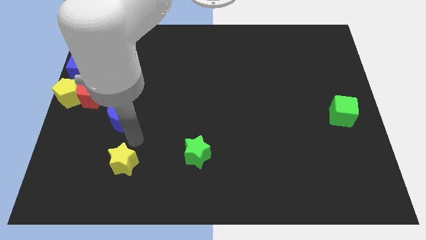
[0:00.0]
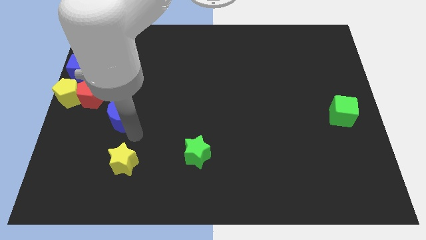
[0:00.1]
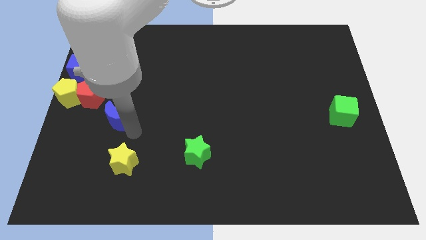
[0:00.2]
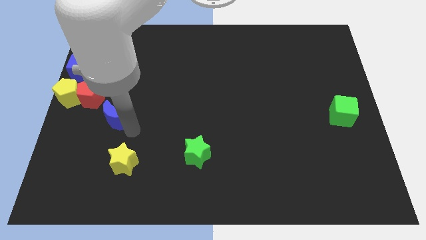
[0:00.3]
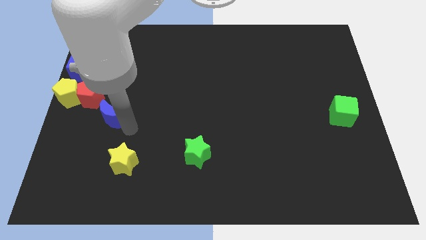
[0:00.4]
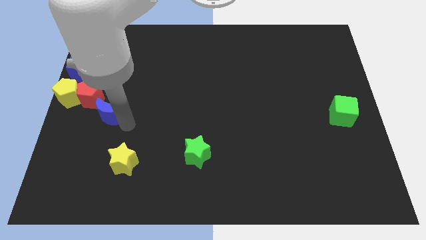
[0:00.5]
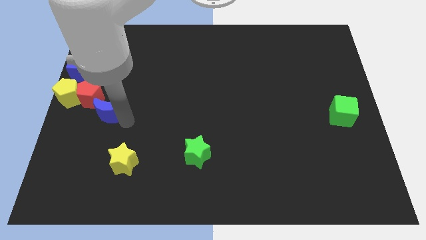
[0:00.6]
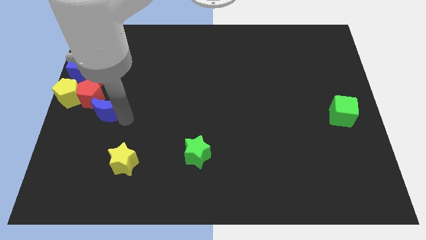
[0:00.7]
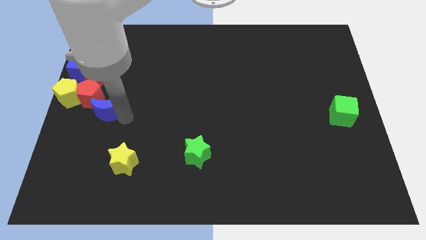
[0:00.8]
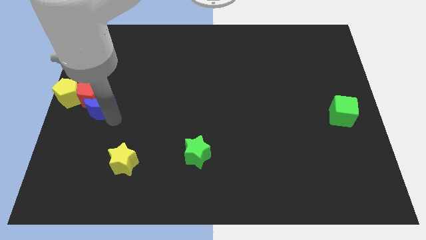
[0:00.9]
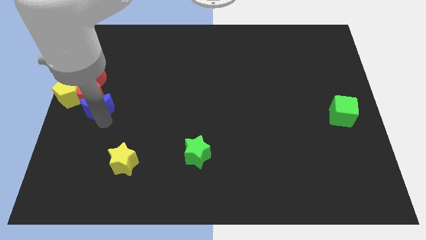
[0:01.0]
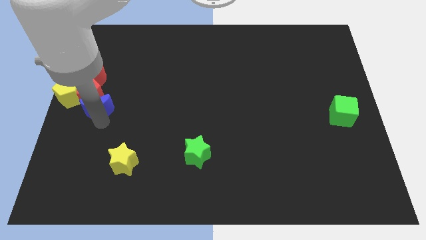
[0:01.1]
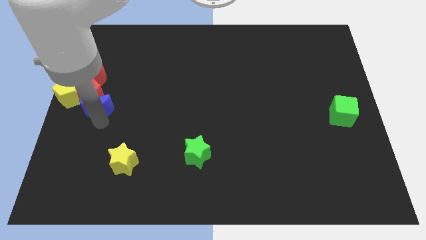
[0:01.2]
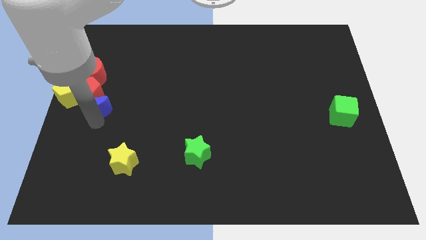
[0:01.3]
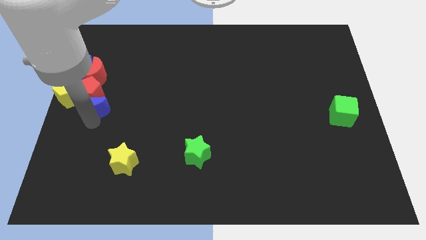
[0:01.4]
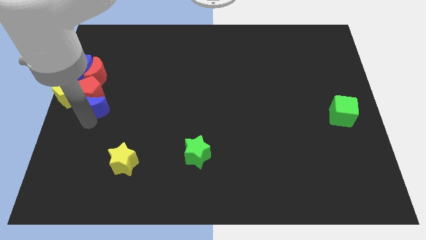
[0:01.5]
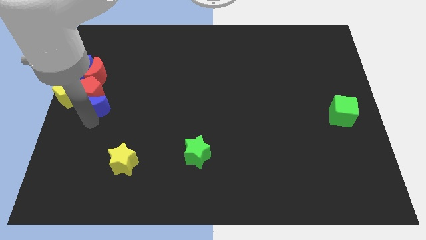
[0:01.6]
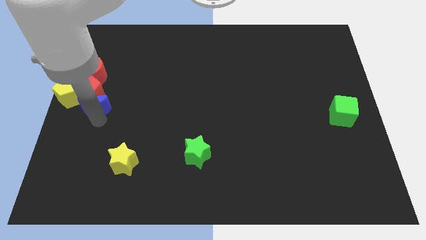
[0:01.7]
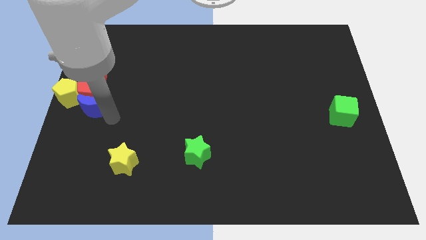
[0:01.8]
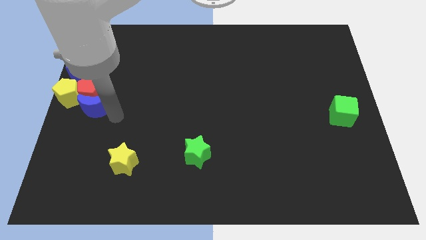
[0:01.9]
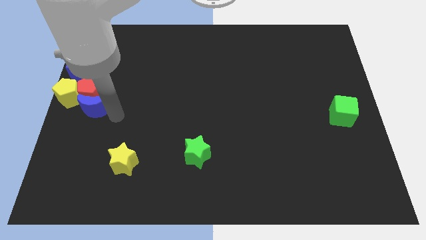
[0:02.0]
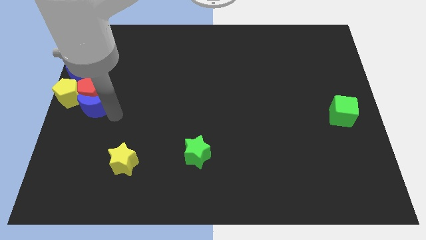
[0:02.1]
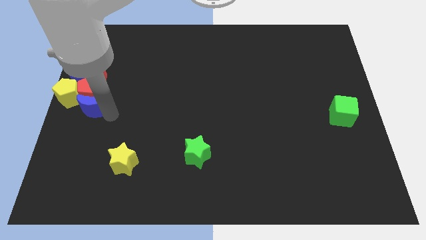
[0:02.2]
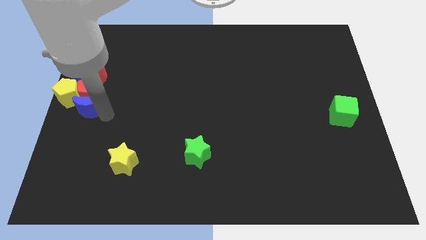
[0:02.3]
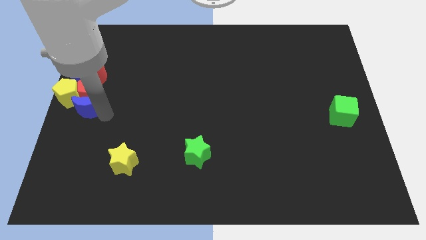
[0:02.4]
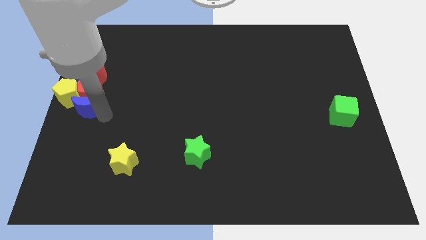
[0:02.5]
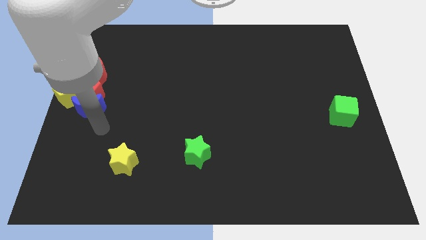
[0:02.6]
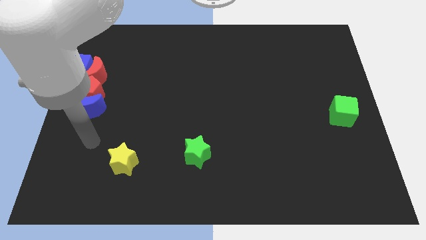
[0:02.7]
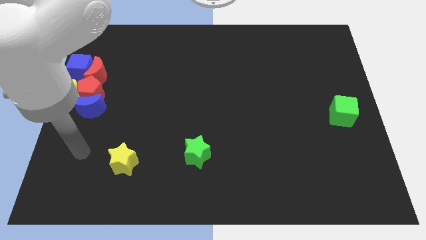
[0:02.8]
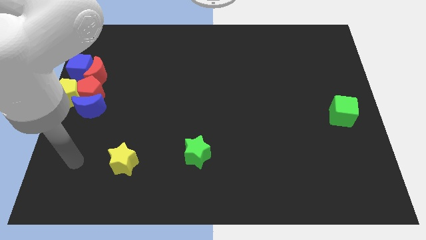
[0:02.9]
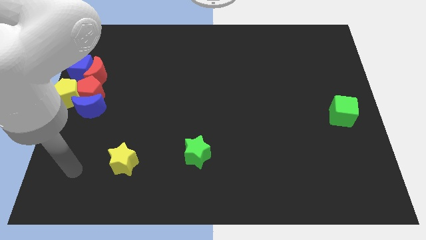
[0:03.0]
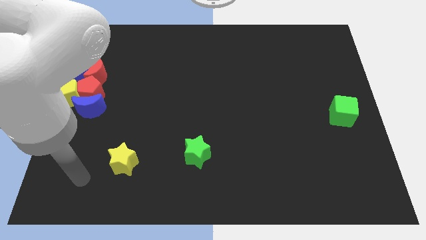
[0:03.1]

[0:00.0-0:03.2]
place the blue moon below the red pentagon

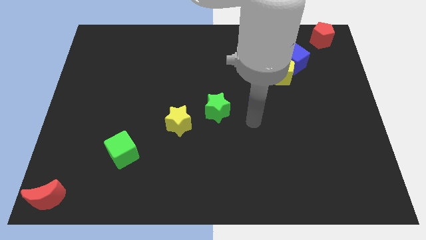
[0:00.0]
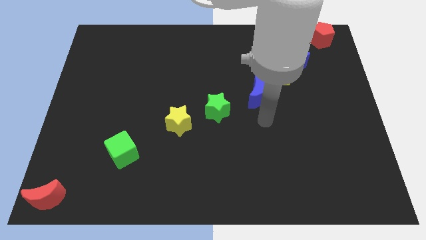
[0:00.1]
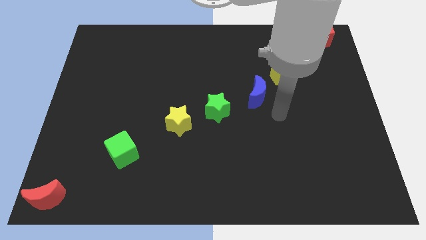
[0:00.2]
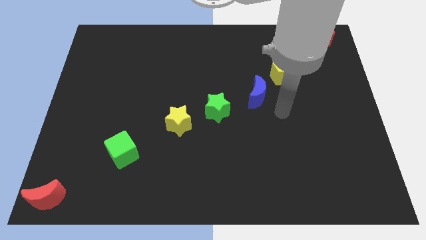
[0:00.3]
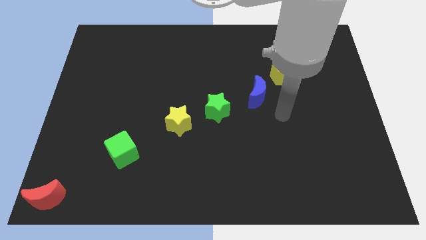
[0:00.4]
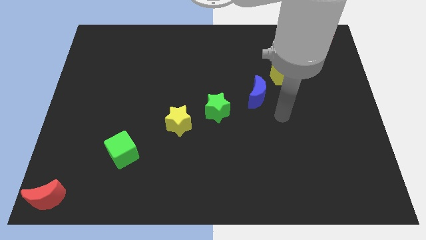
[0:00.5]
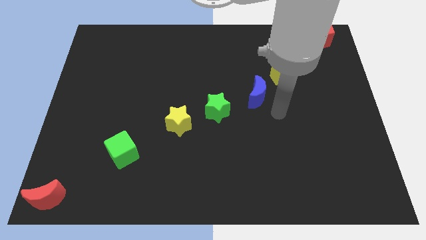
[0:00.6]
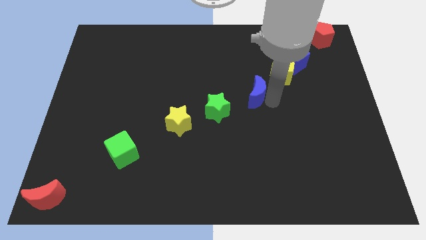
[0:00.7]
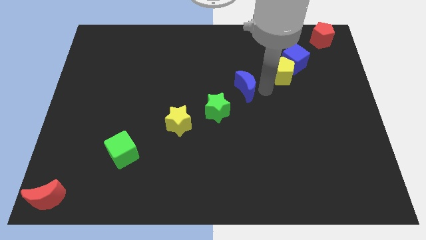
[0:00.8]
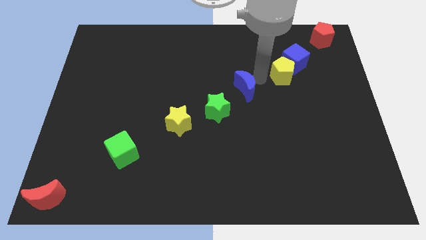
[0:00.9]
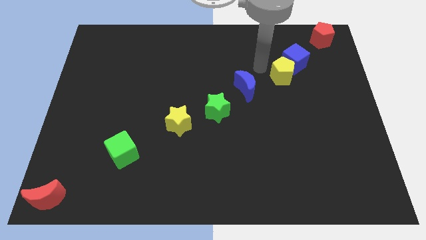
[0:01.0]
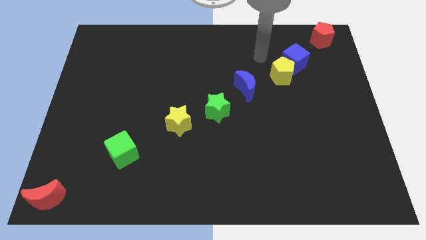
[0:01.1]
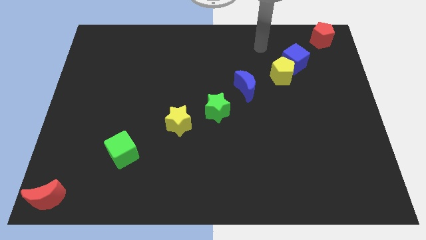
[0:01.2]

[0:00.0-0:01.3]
push the blue crescent to the left of the yellow pentagon

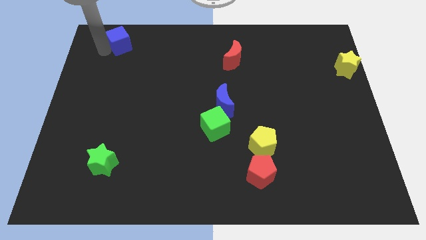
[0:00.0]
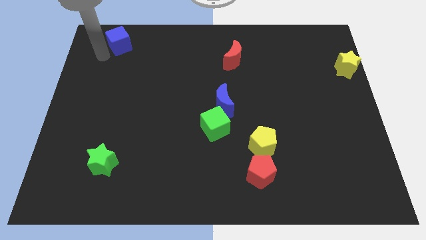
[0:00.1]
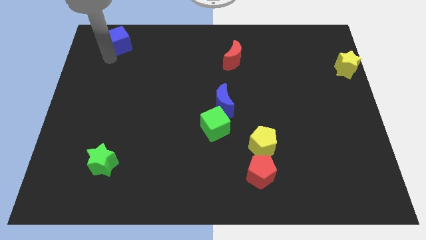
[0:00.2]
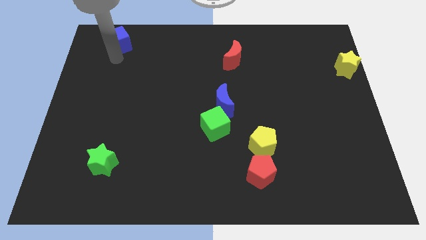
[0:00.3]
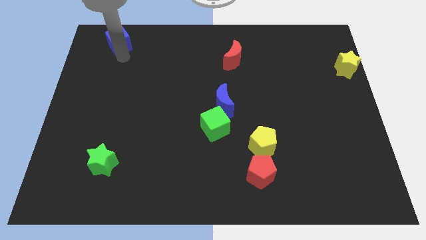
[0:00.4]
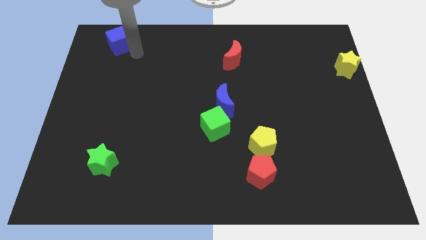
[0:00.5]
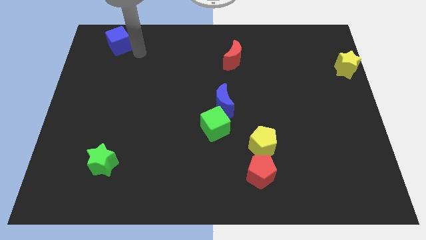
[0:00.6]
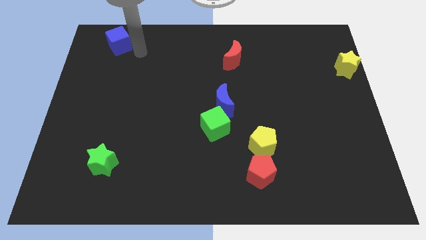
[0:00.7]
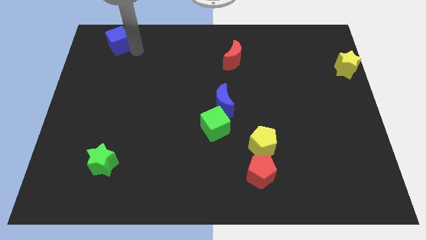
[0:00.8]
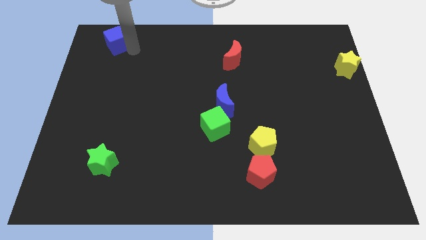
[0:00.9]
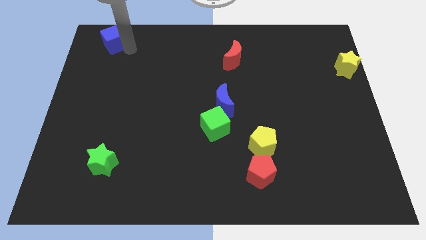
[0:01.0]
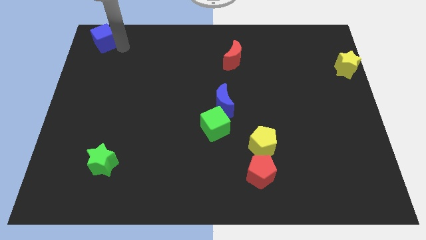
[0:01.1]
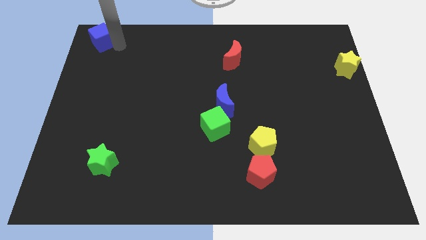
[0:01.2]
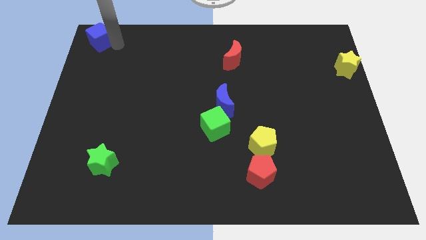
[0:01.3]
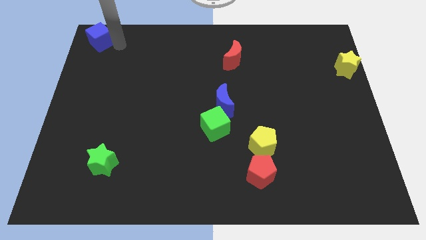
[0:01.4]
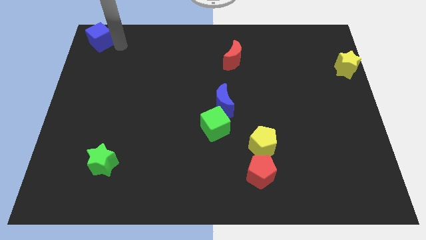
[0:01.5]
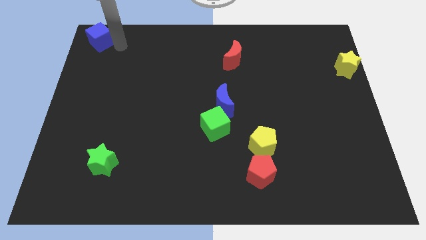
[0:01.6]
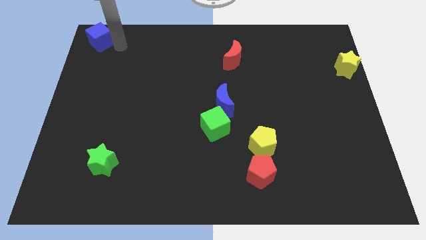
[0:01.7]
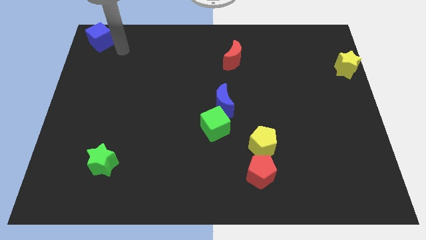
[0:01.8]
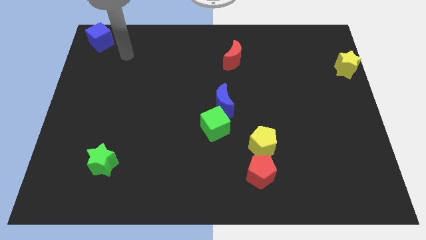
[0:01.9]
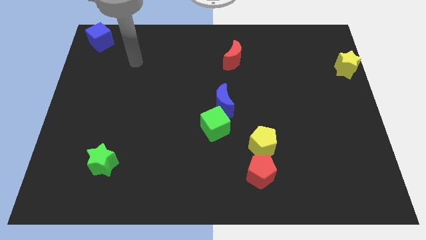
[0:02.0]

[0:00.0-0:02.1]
push blue cube to top left corner

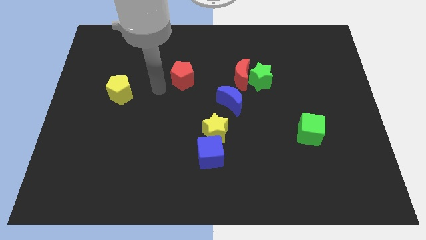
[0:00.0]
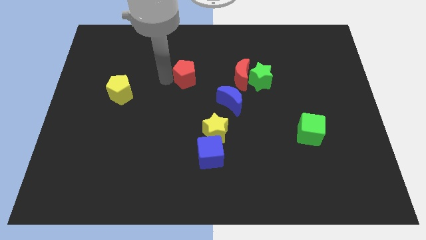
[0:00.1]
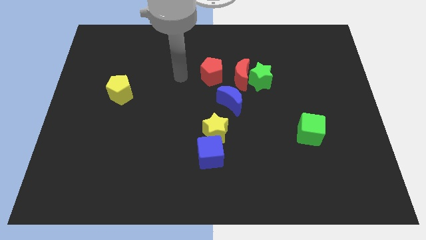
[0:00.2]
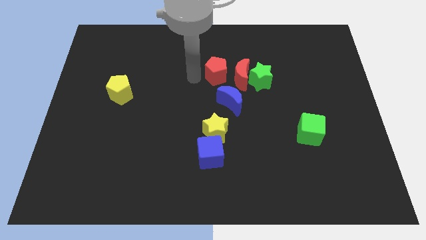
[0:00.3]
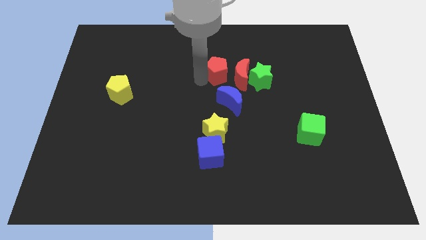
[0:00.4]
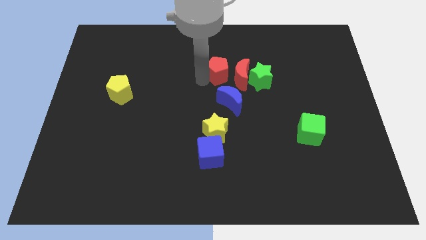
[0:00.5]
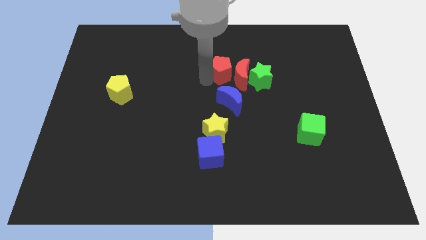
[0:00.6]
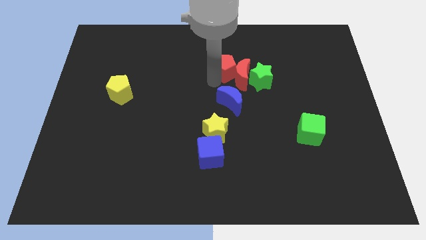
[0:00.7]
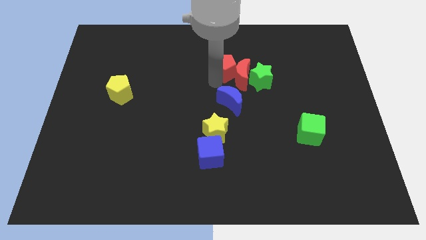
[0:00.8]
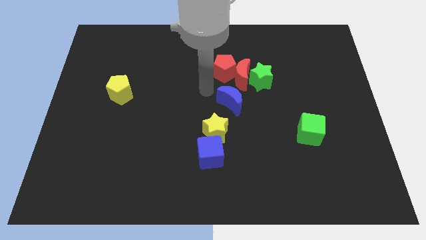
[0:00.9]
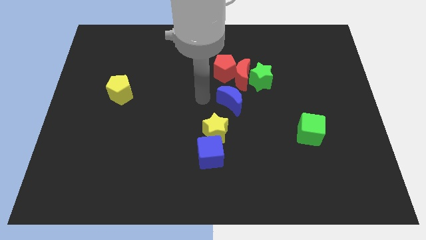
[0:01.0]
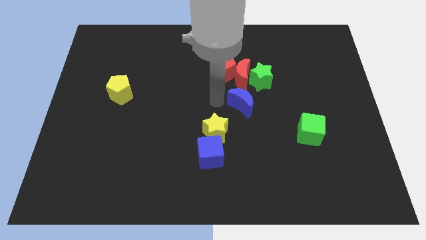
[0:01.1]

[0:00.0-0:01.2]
place the red pentagon left to the red crescent

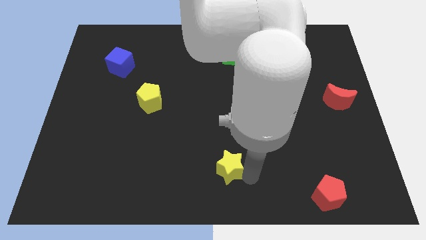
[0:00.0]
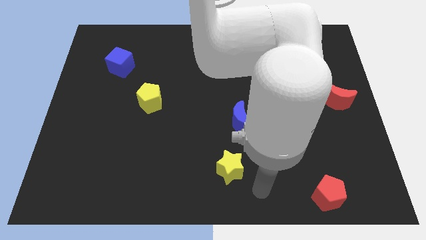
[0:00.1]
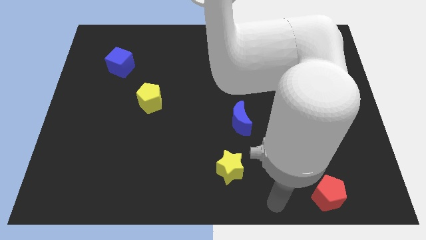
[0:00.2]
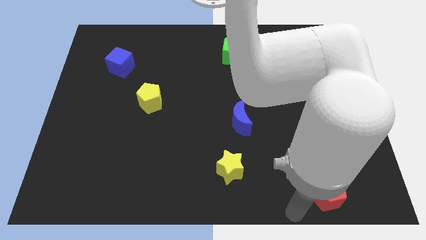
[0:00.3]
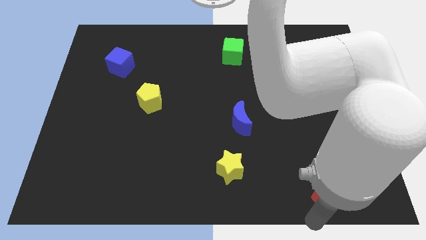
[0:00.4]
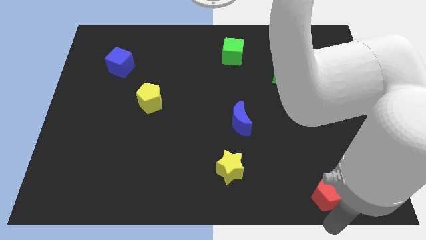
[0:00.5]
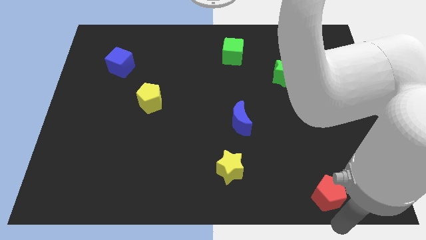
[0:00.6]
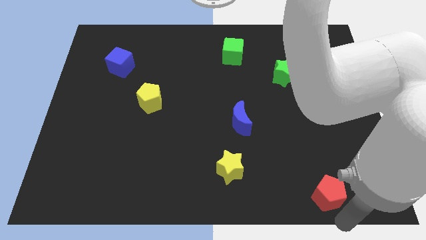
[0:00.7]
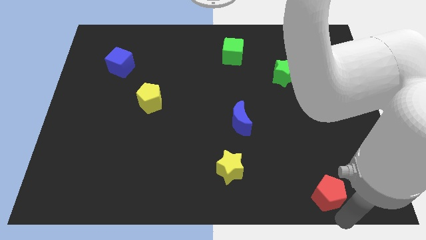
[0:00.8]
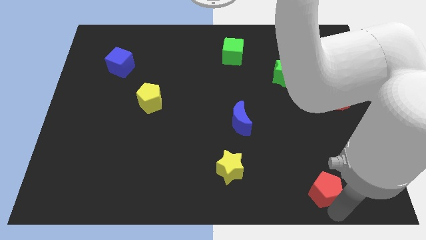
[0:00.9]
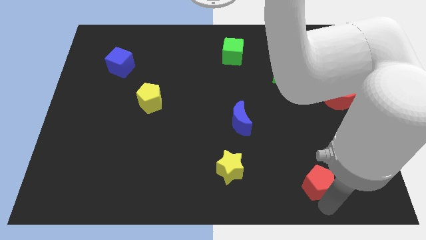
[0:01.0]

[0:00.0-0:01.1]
move the arm away from the yellow star
